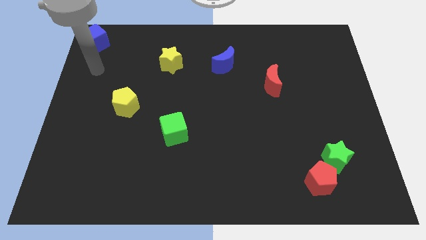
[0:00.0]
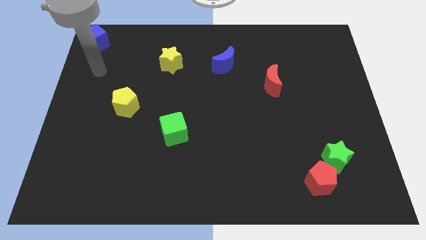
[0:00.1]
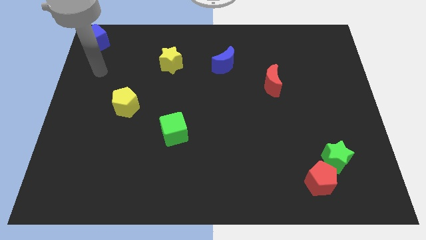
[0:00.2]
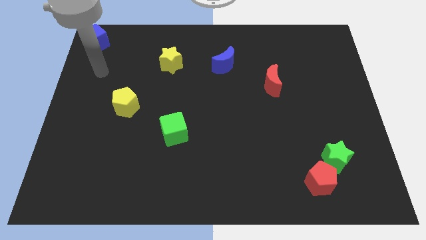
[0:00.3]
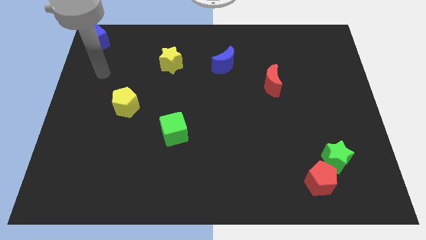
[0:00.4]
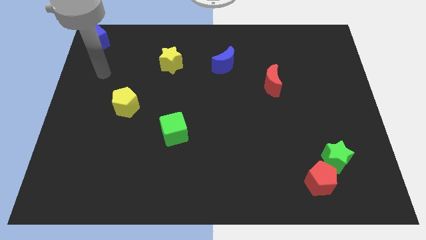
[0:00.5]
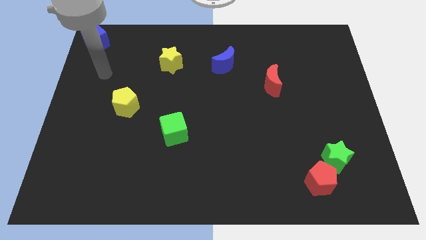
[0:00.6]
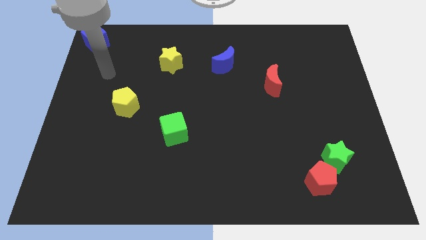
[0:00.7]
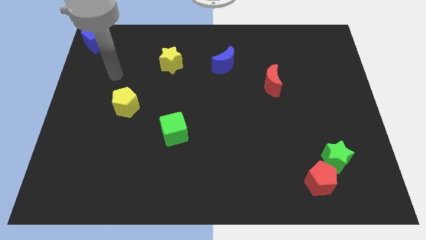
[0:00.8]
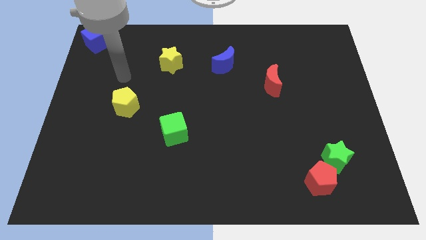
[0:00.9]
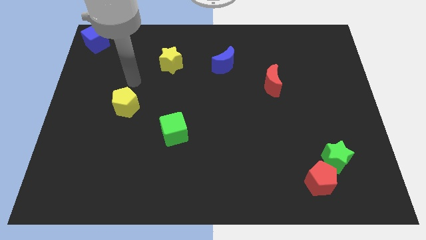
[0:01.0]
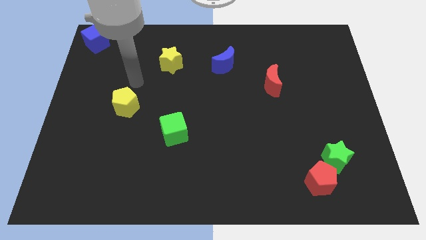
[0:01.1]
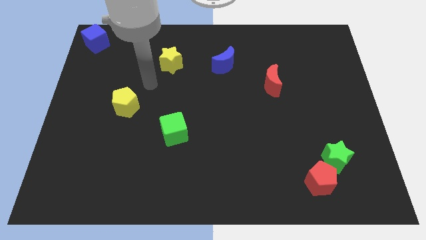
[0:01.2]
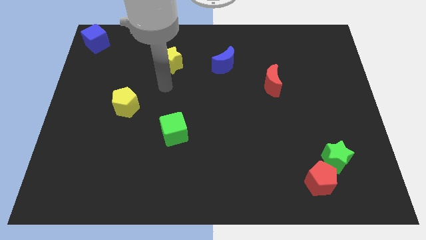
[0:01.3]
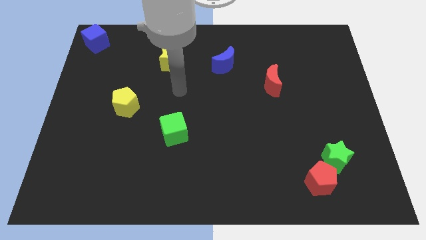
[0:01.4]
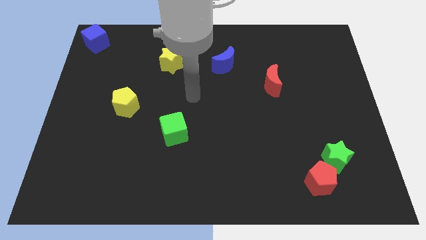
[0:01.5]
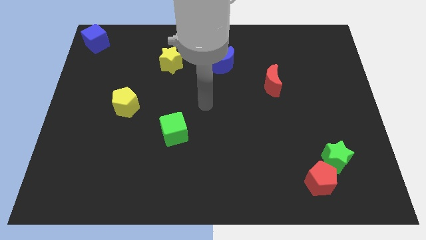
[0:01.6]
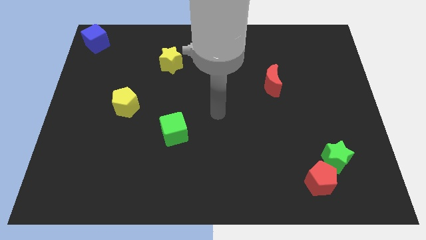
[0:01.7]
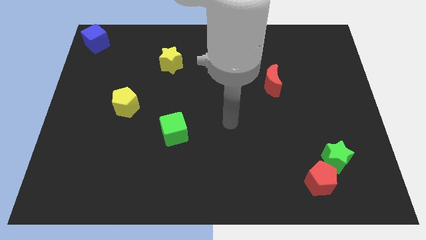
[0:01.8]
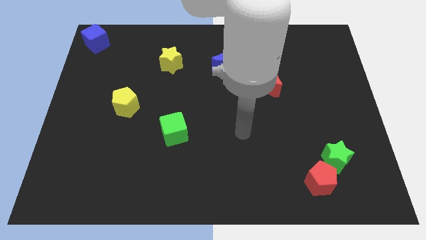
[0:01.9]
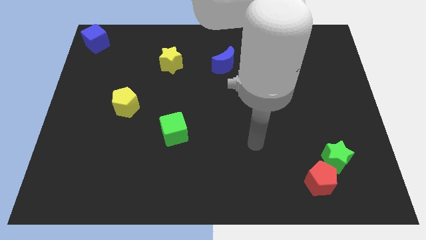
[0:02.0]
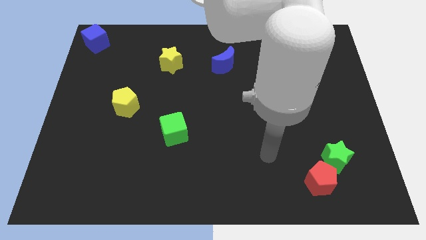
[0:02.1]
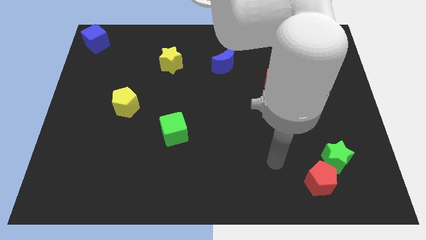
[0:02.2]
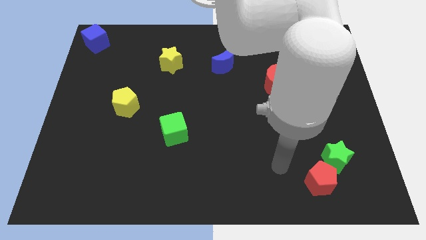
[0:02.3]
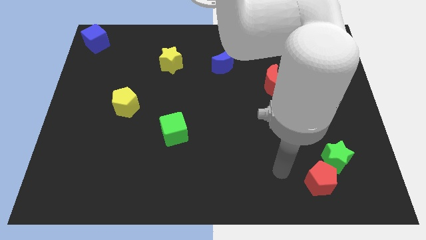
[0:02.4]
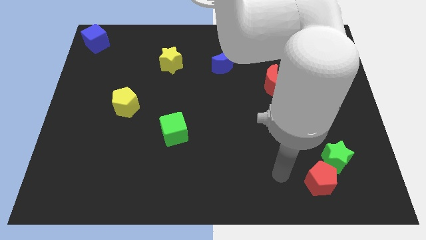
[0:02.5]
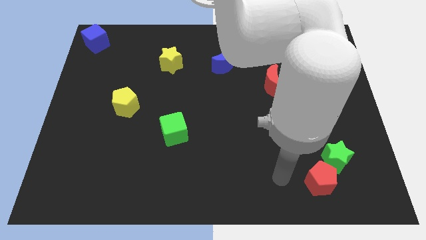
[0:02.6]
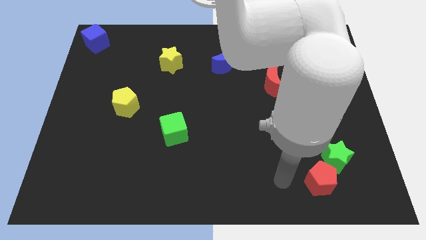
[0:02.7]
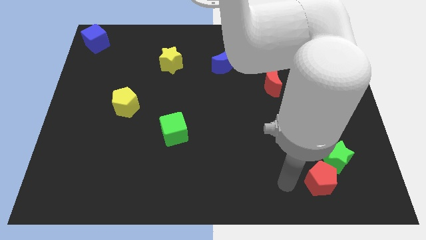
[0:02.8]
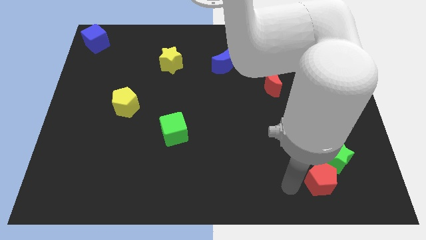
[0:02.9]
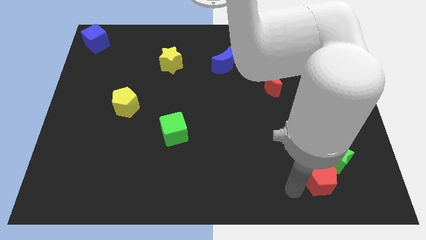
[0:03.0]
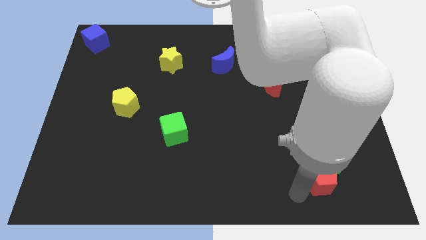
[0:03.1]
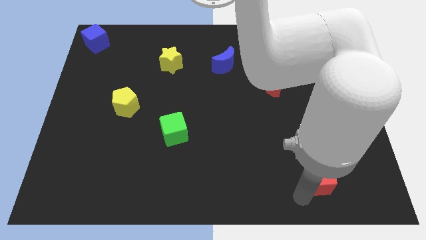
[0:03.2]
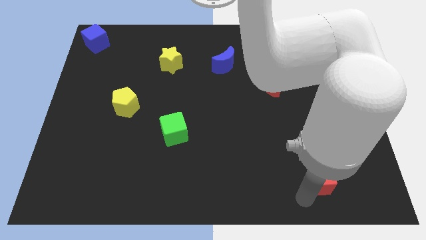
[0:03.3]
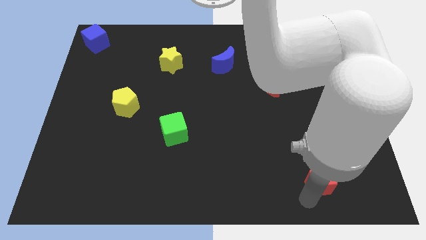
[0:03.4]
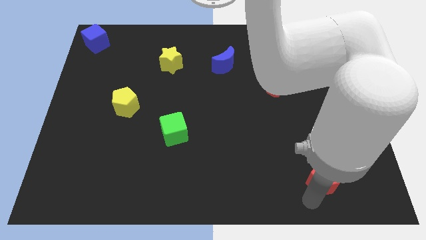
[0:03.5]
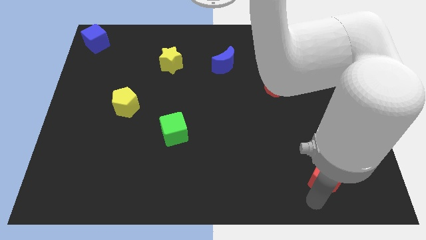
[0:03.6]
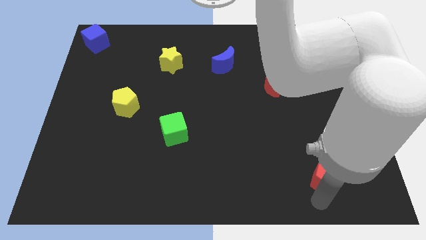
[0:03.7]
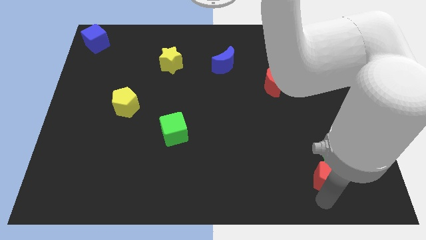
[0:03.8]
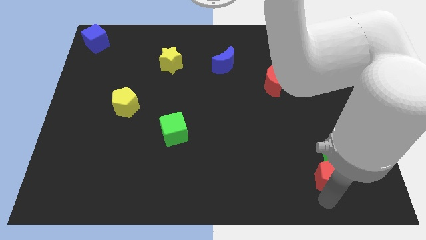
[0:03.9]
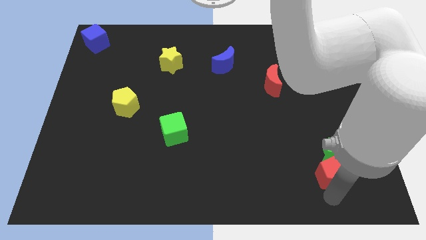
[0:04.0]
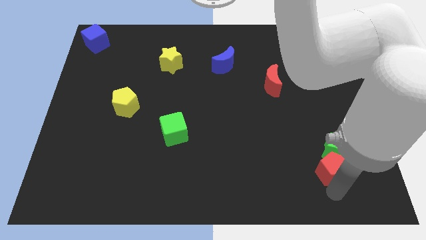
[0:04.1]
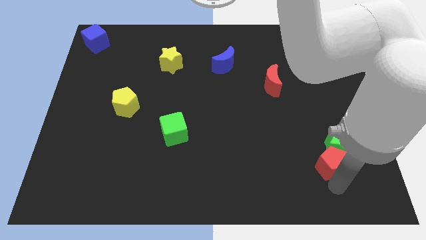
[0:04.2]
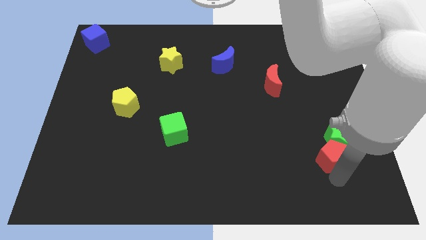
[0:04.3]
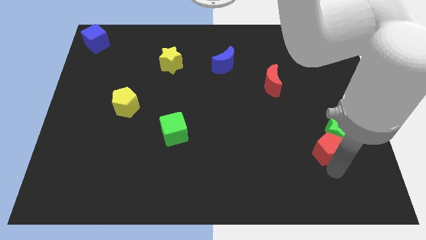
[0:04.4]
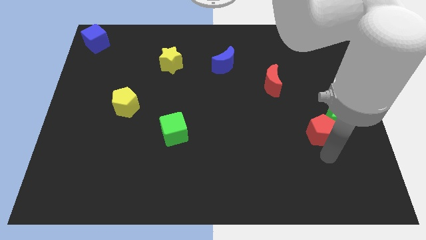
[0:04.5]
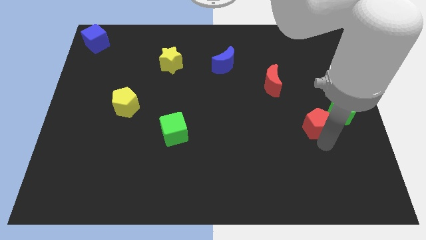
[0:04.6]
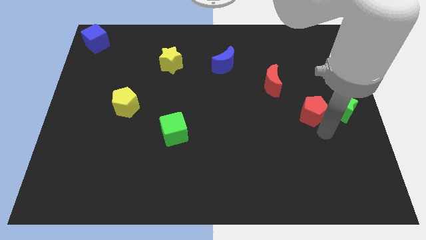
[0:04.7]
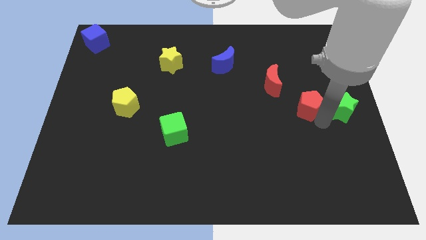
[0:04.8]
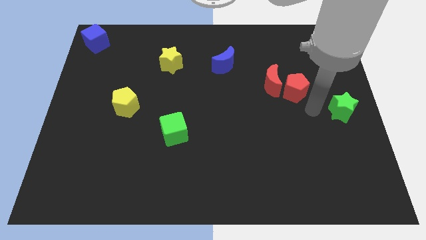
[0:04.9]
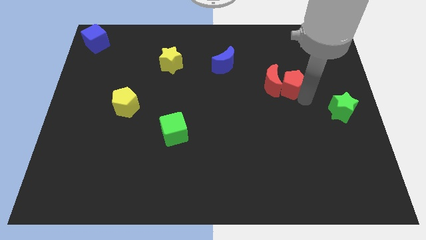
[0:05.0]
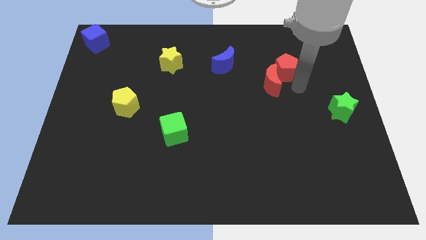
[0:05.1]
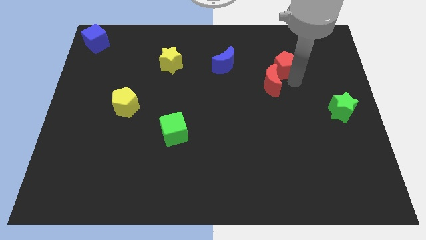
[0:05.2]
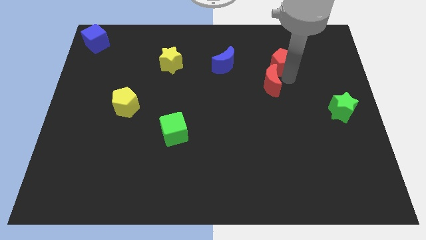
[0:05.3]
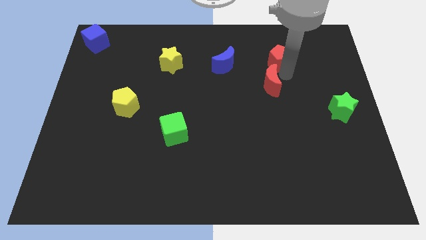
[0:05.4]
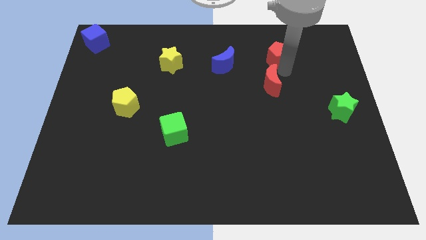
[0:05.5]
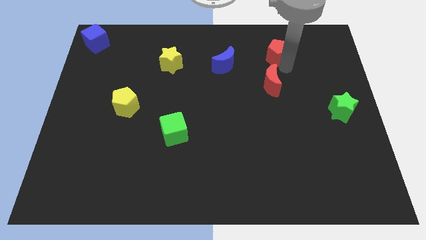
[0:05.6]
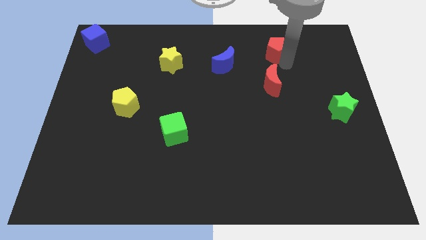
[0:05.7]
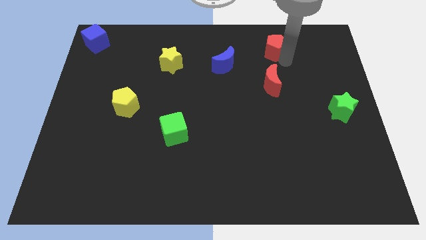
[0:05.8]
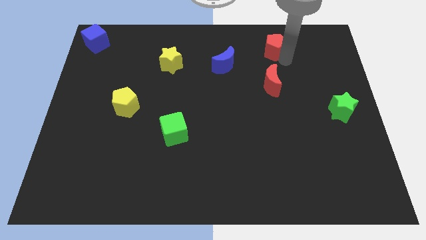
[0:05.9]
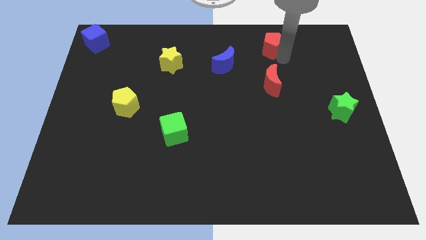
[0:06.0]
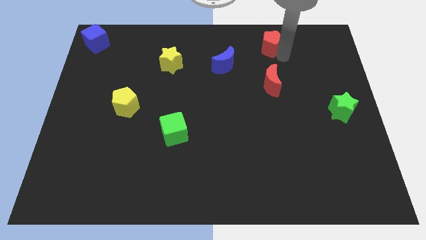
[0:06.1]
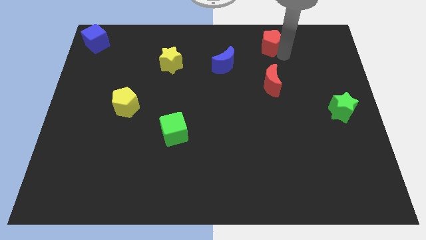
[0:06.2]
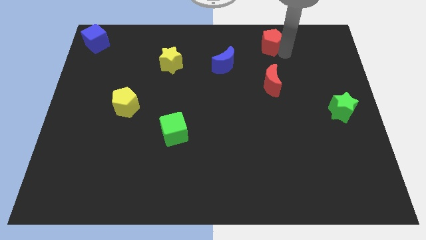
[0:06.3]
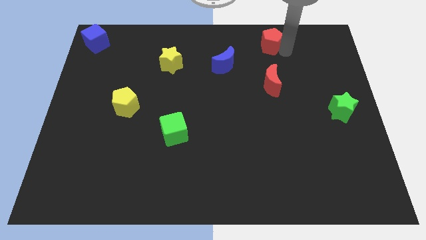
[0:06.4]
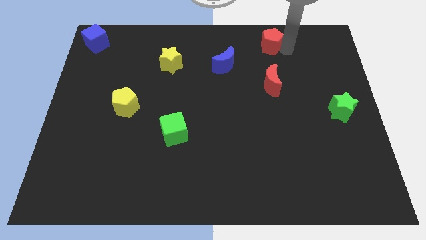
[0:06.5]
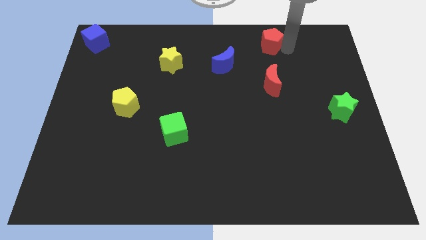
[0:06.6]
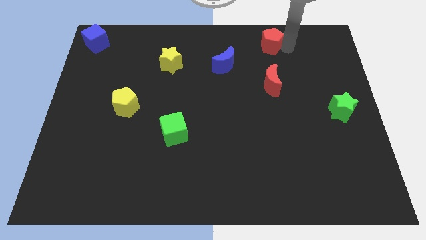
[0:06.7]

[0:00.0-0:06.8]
move red pentagon above red moon

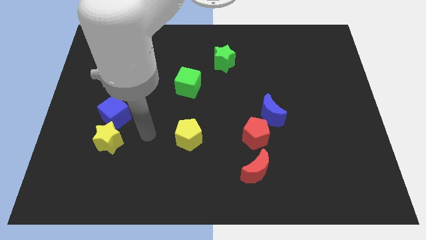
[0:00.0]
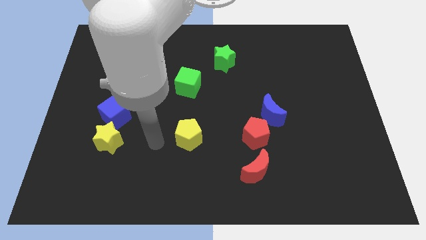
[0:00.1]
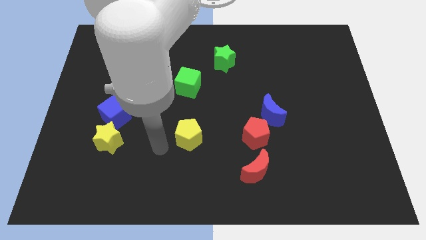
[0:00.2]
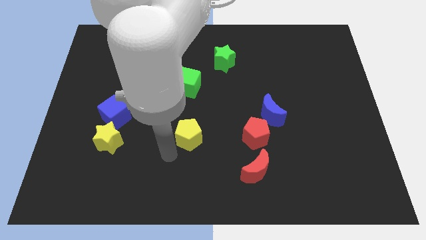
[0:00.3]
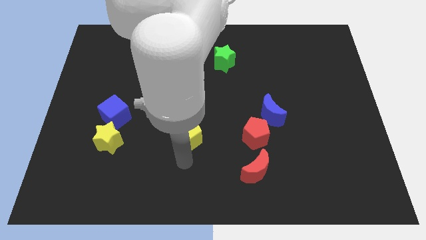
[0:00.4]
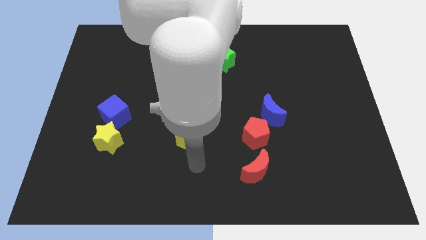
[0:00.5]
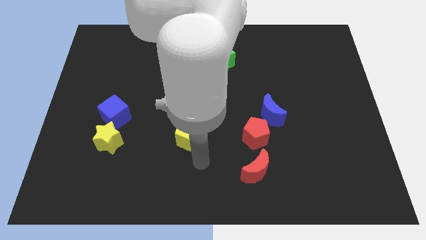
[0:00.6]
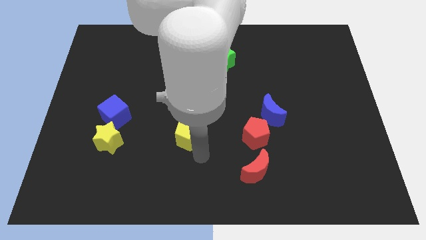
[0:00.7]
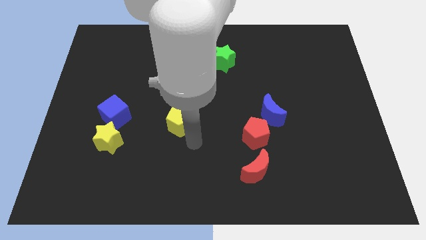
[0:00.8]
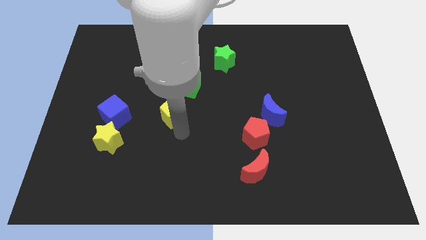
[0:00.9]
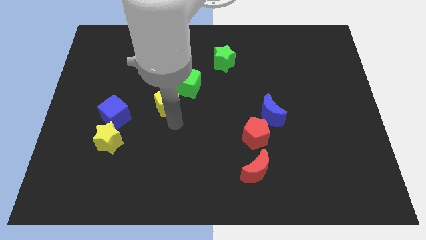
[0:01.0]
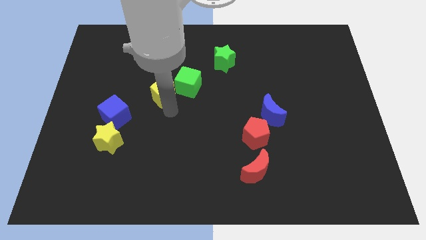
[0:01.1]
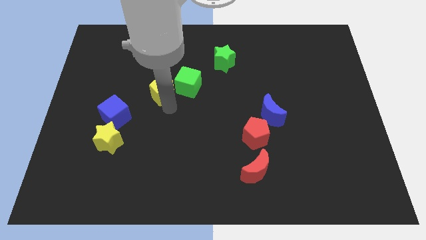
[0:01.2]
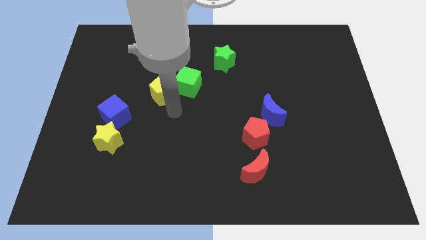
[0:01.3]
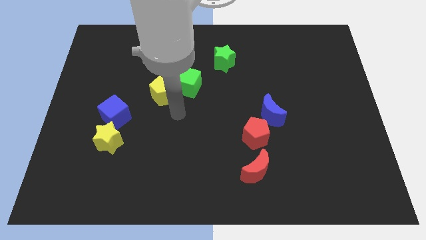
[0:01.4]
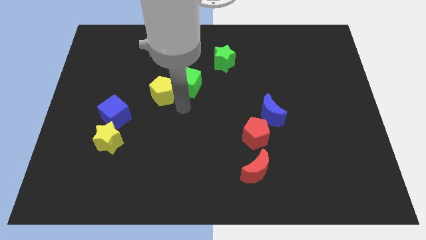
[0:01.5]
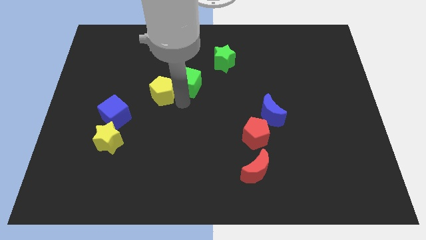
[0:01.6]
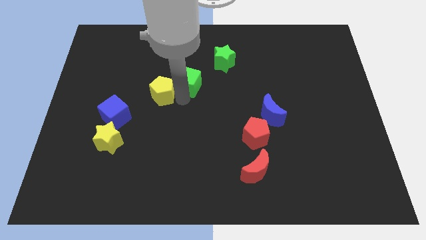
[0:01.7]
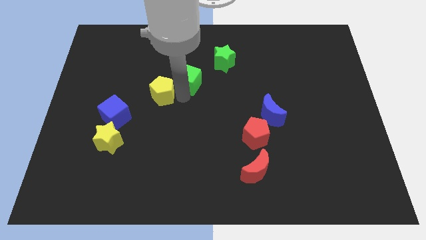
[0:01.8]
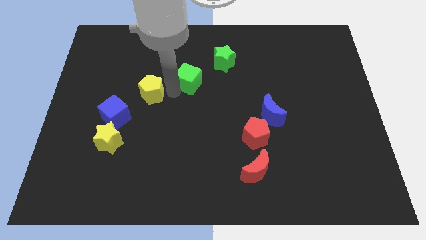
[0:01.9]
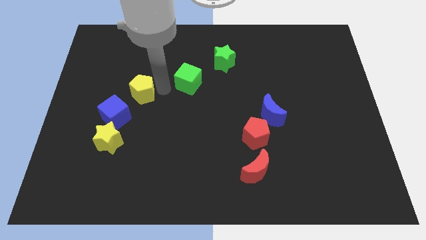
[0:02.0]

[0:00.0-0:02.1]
place the yellow pentagon vertically at the top of blue cube

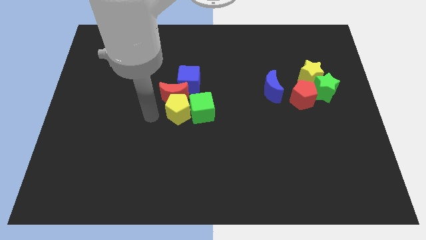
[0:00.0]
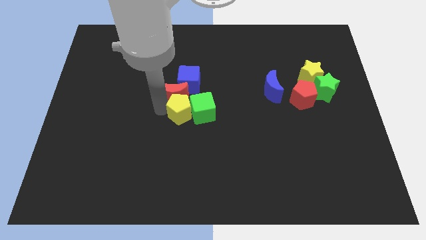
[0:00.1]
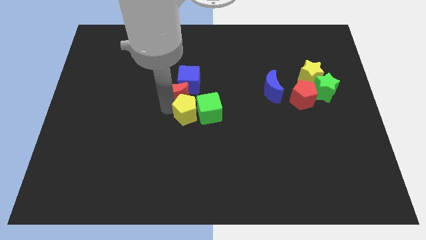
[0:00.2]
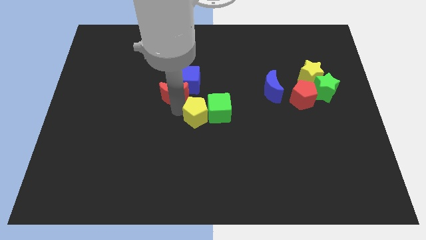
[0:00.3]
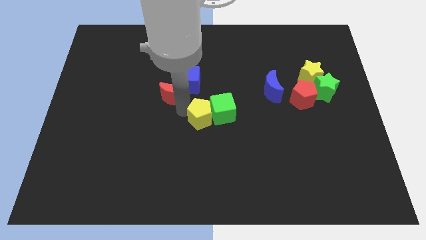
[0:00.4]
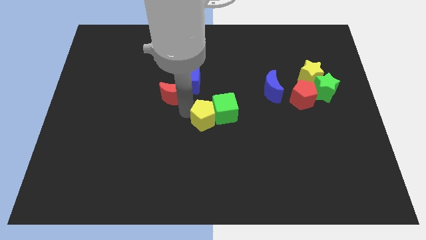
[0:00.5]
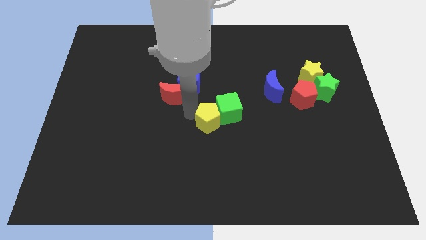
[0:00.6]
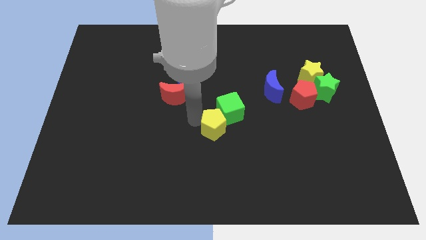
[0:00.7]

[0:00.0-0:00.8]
separate redmoon and yellow pentagon
